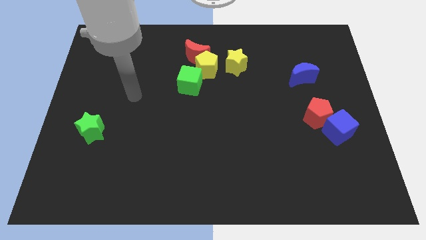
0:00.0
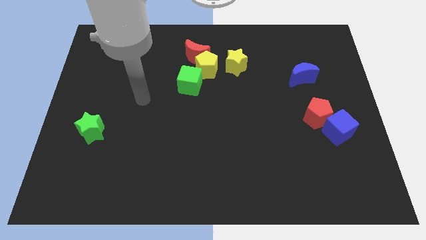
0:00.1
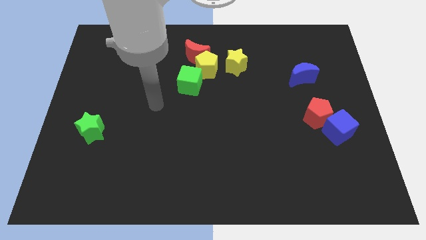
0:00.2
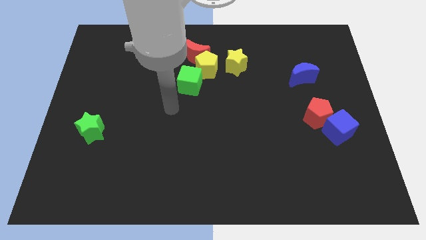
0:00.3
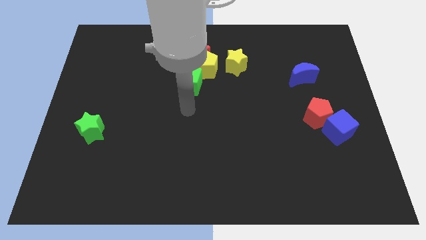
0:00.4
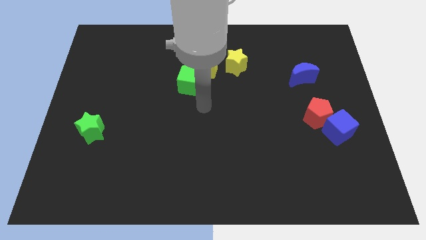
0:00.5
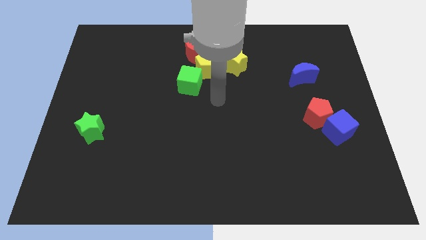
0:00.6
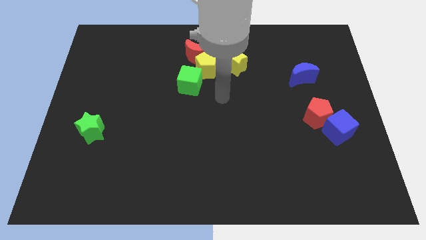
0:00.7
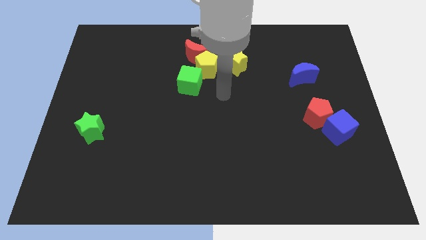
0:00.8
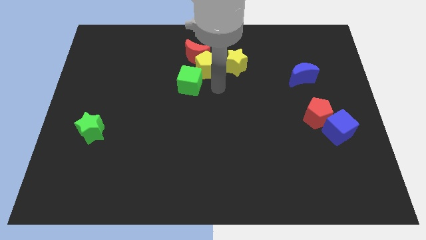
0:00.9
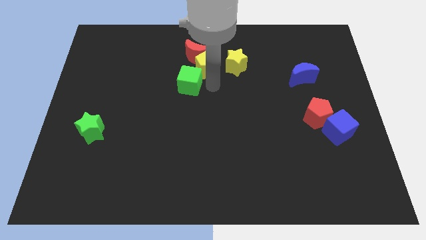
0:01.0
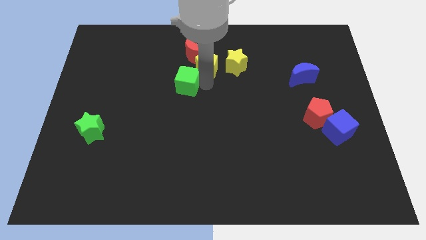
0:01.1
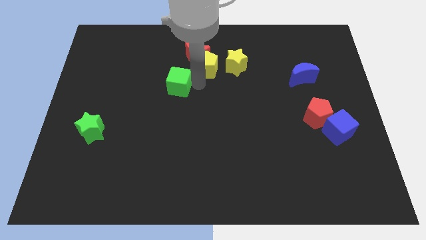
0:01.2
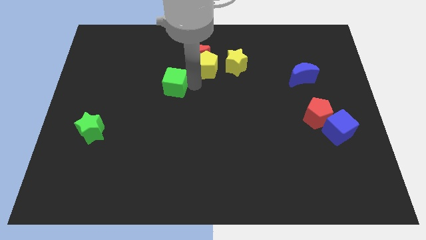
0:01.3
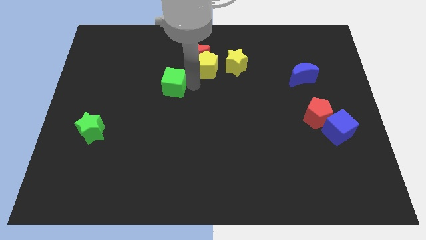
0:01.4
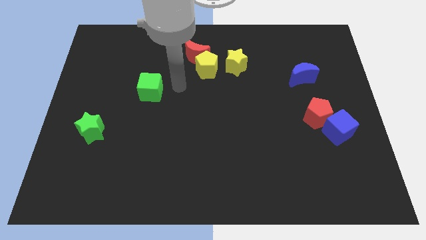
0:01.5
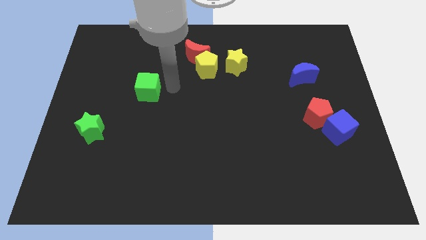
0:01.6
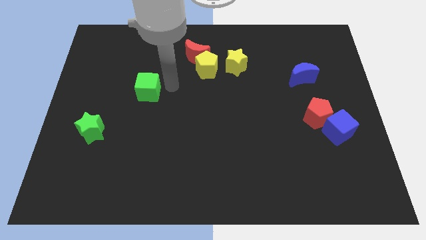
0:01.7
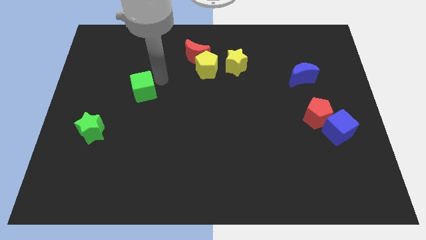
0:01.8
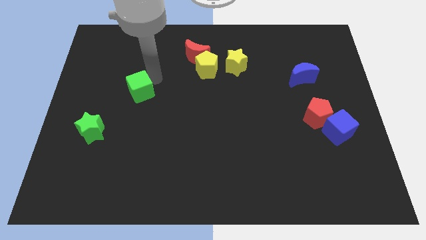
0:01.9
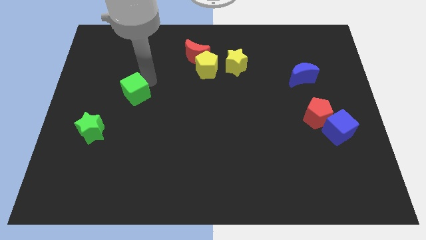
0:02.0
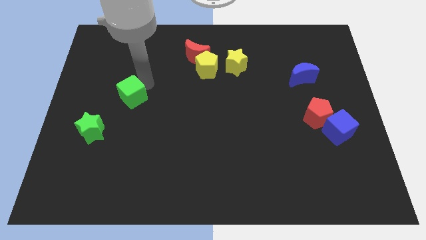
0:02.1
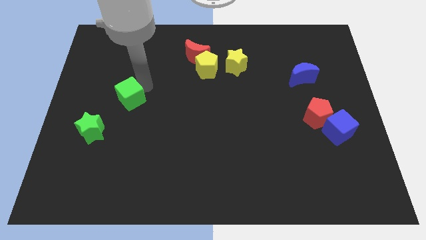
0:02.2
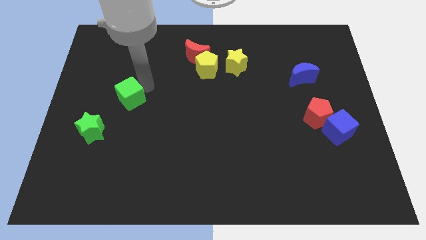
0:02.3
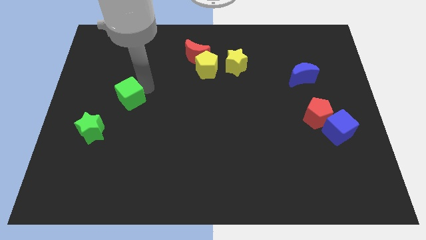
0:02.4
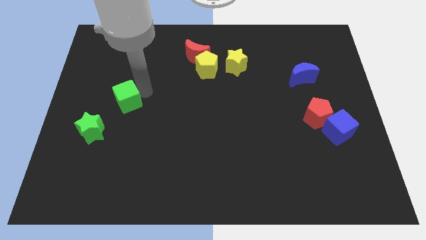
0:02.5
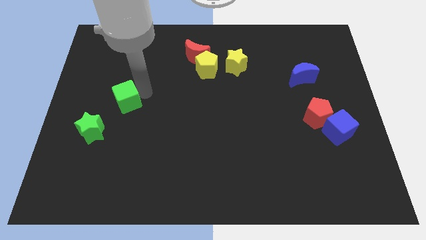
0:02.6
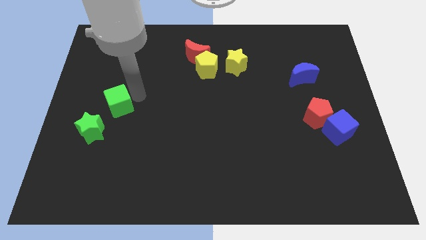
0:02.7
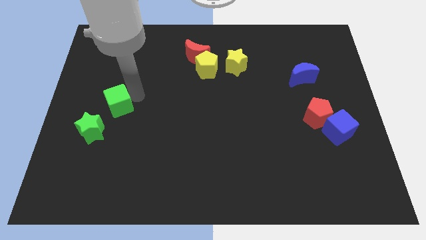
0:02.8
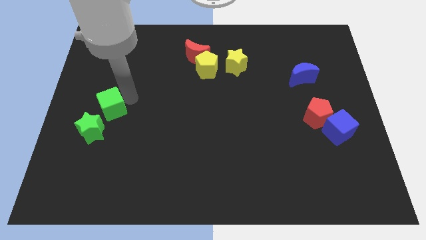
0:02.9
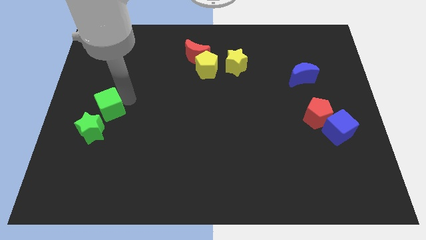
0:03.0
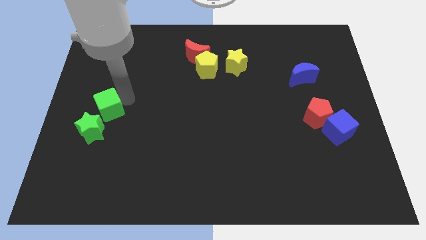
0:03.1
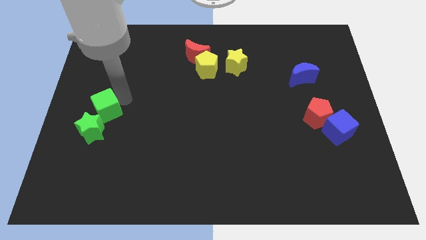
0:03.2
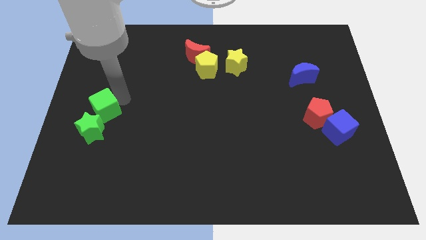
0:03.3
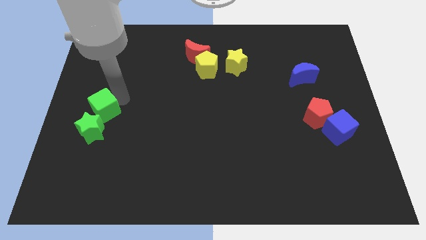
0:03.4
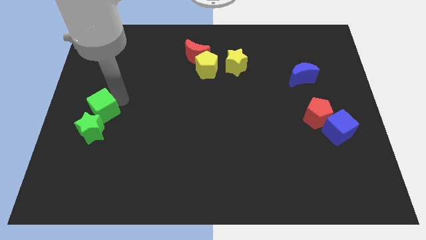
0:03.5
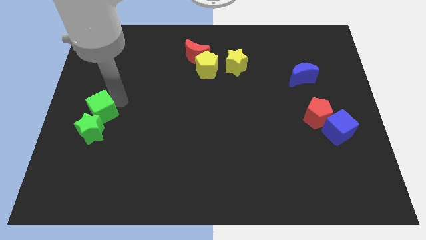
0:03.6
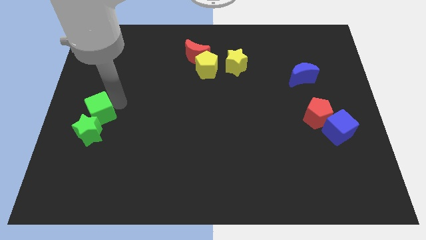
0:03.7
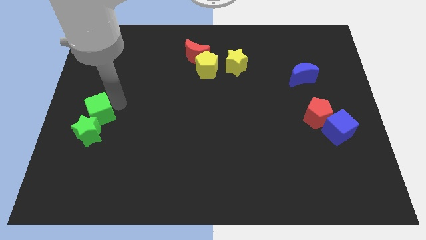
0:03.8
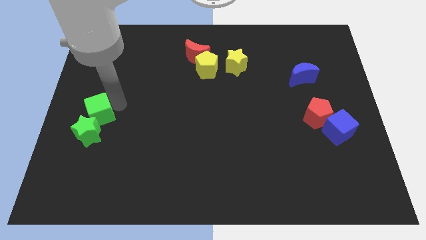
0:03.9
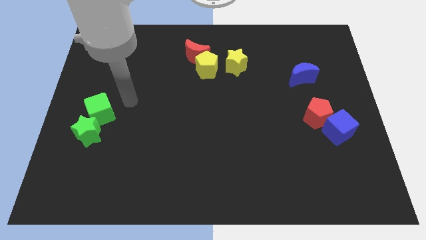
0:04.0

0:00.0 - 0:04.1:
move green cube into the yellow star

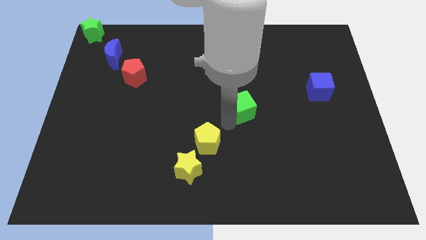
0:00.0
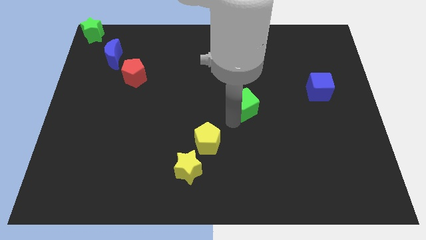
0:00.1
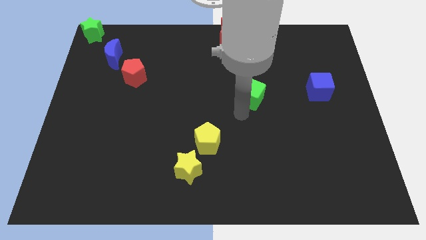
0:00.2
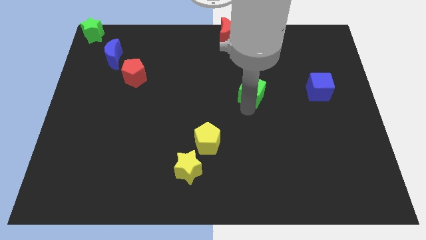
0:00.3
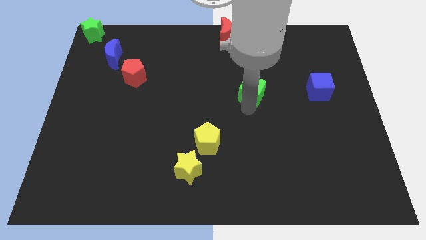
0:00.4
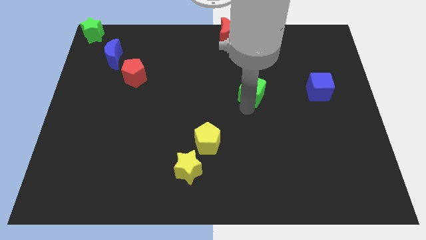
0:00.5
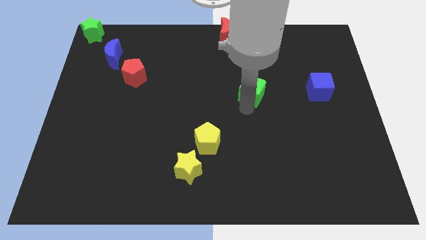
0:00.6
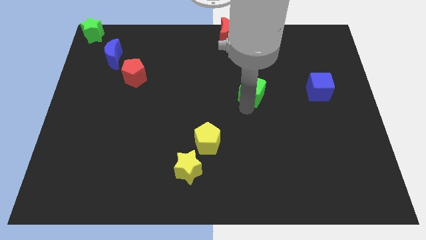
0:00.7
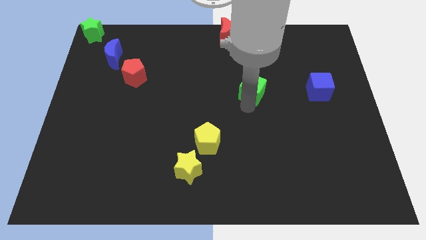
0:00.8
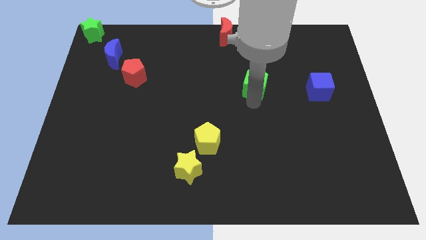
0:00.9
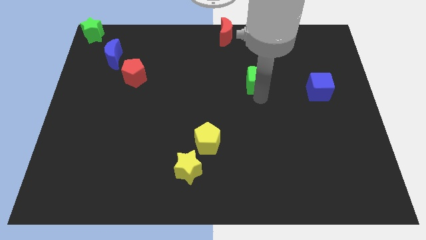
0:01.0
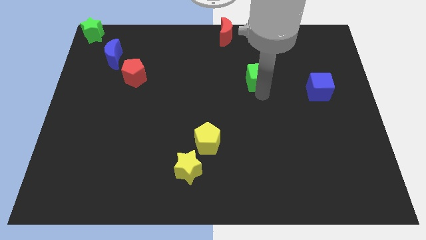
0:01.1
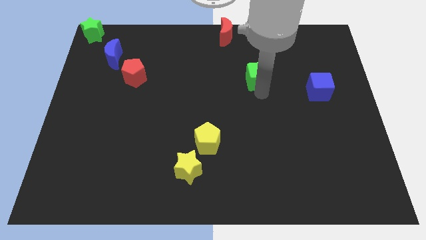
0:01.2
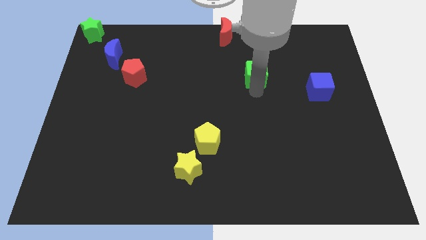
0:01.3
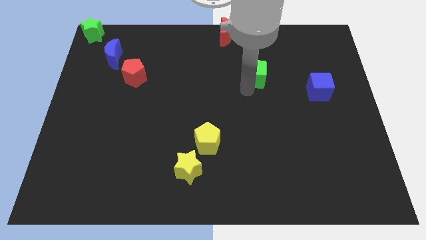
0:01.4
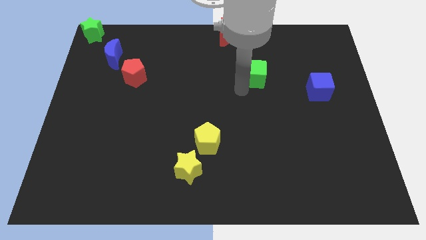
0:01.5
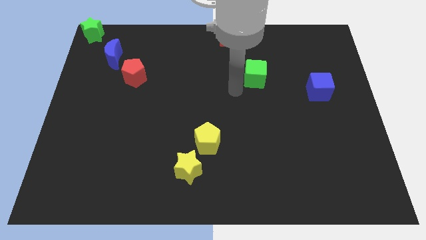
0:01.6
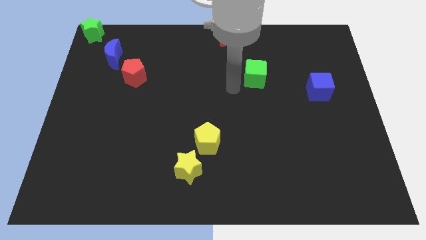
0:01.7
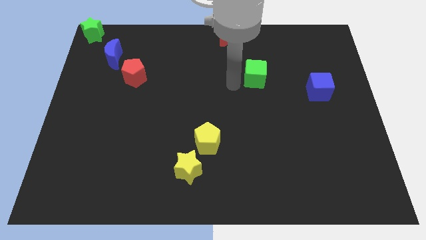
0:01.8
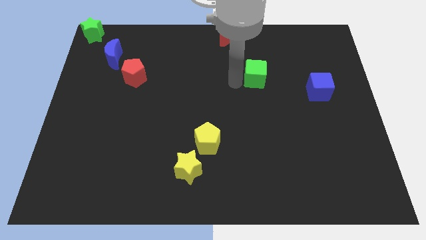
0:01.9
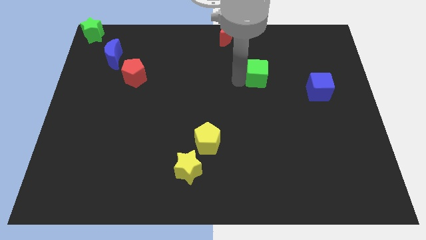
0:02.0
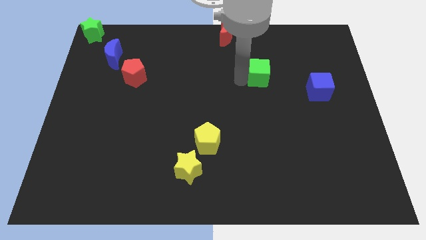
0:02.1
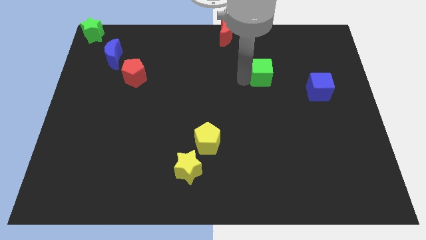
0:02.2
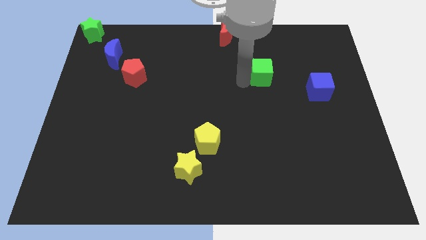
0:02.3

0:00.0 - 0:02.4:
move slightly the green cube to the top

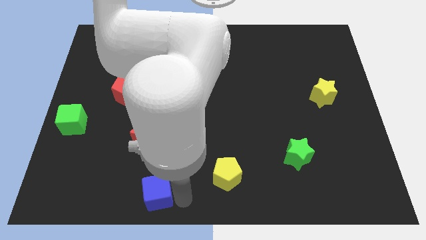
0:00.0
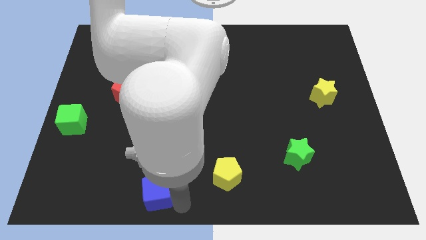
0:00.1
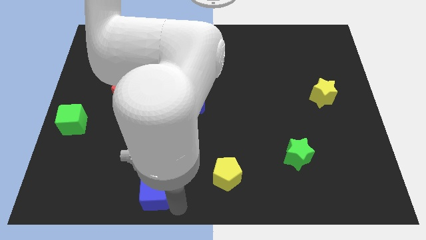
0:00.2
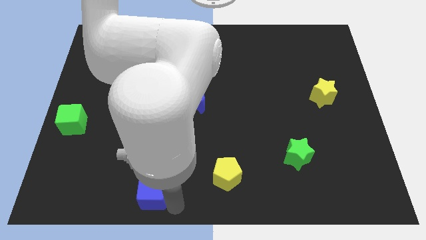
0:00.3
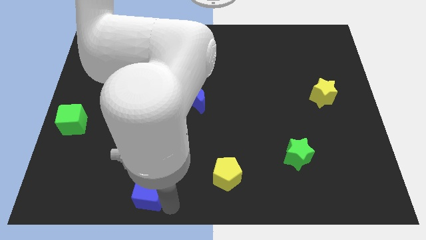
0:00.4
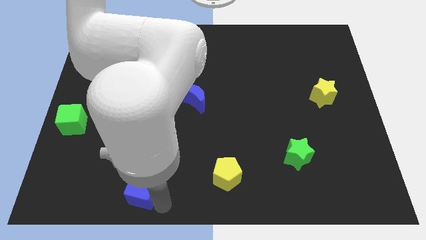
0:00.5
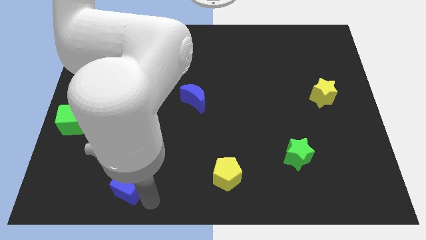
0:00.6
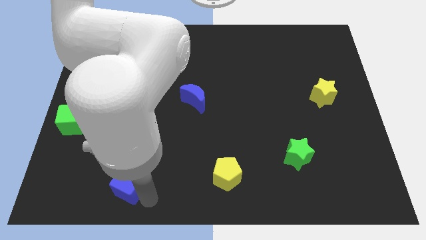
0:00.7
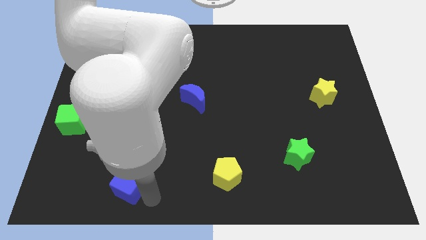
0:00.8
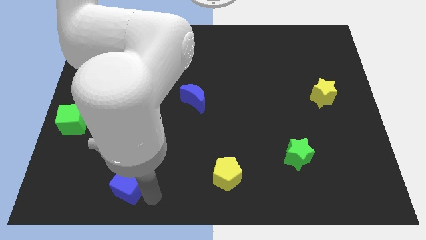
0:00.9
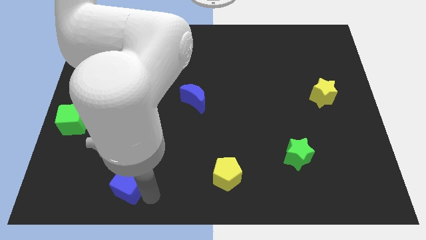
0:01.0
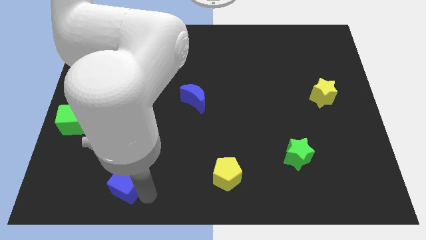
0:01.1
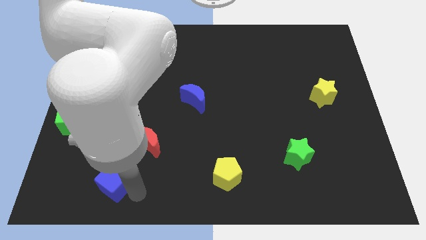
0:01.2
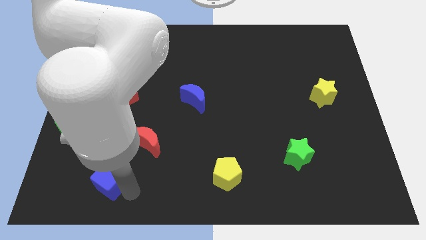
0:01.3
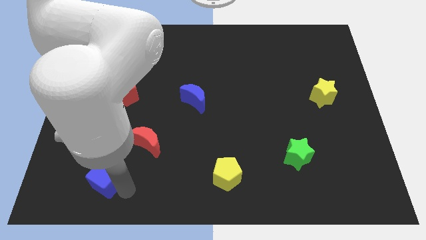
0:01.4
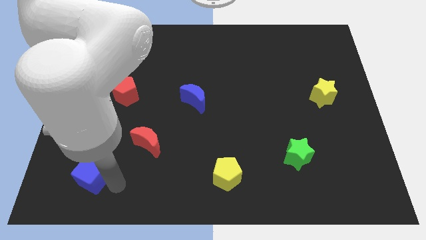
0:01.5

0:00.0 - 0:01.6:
push the blue cube towards the bottom left of the board

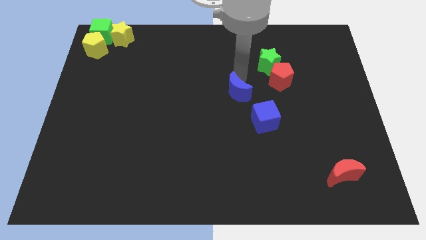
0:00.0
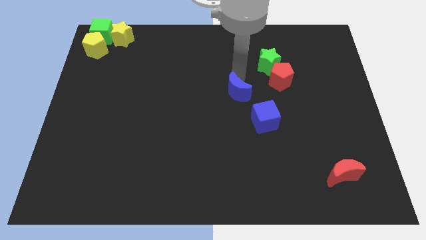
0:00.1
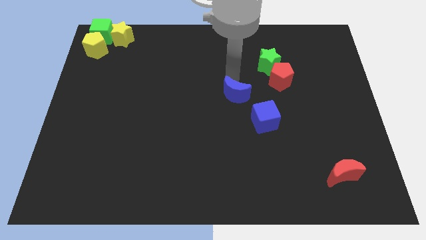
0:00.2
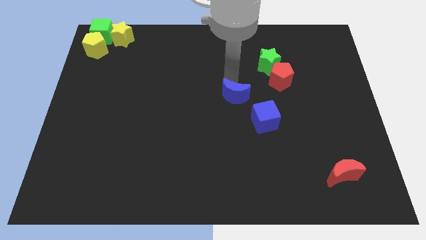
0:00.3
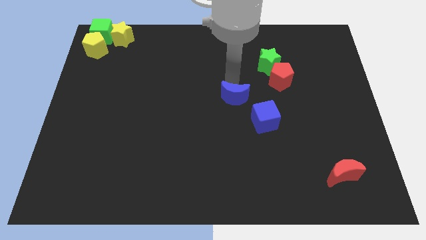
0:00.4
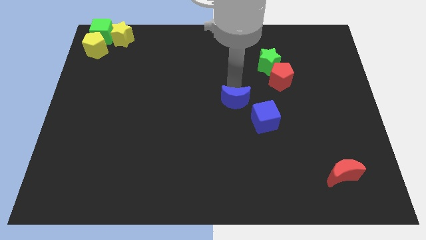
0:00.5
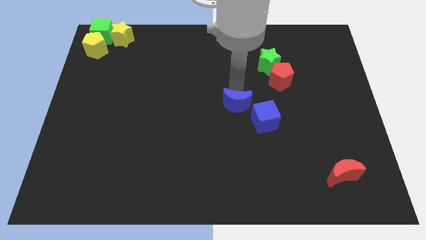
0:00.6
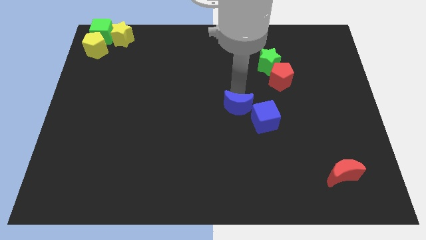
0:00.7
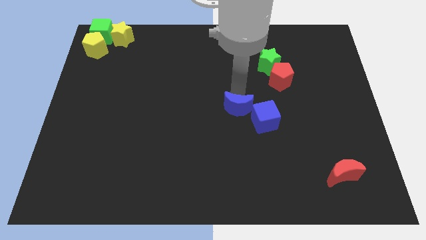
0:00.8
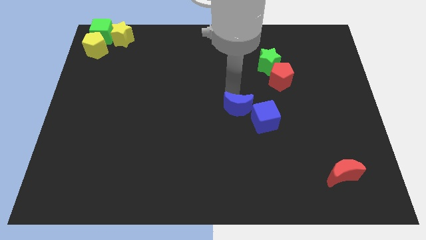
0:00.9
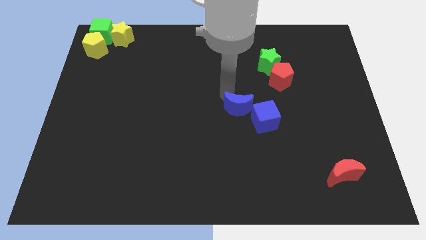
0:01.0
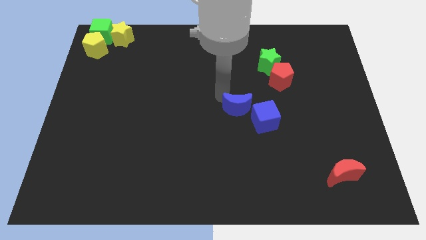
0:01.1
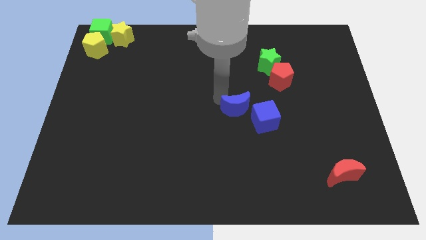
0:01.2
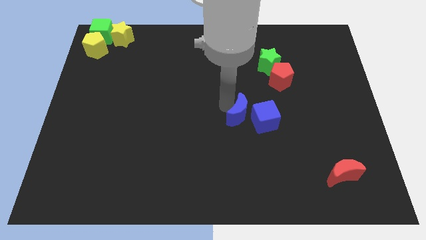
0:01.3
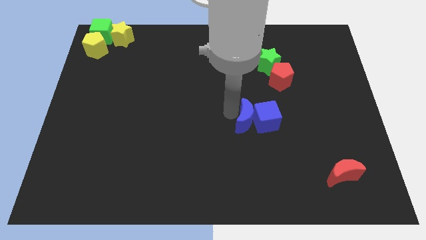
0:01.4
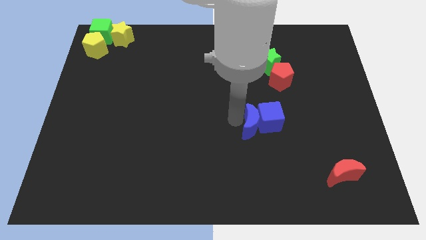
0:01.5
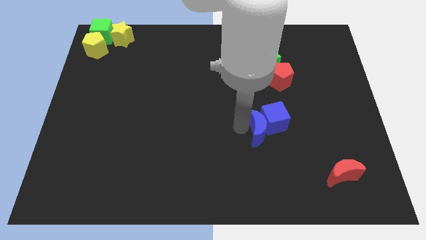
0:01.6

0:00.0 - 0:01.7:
move the blue moon into the left side of the blue cube
